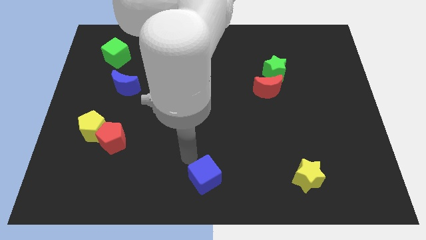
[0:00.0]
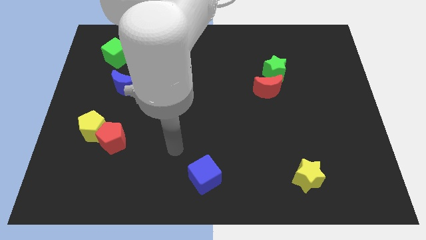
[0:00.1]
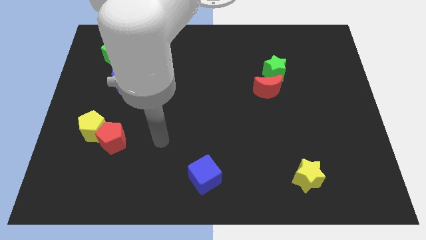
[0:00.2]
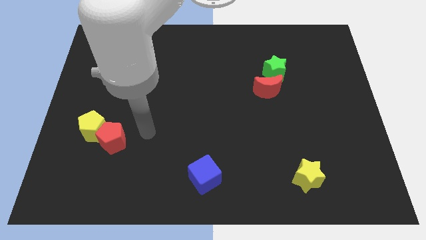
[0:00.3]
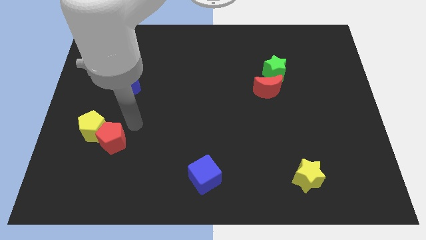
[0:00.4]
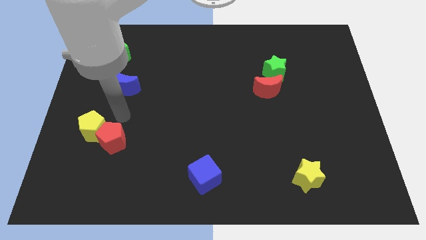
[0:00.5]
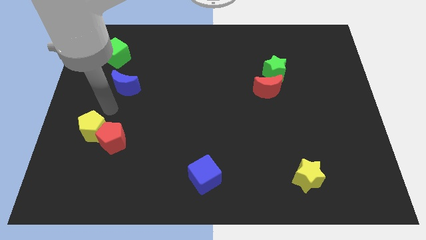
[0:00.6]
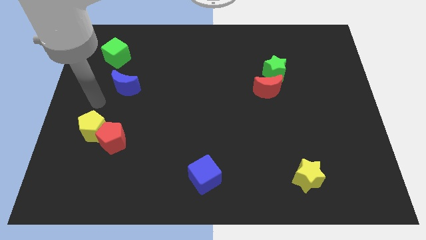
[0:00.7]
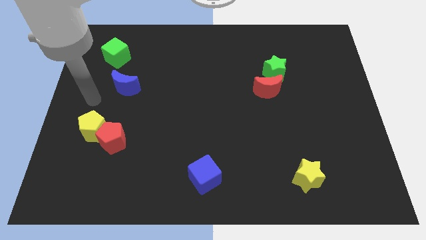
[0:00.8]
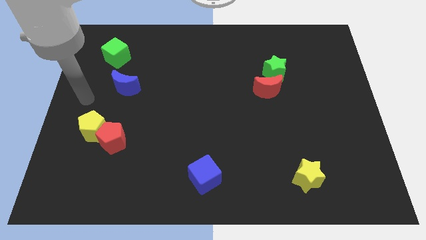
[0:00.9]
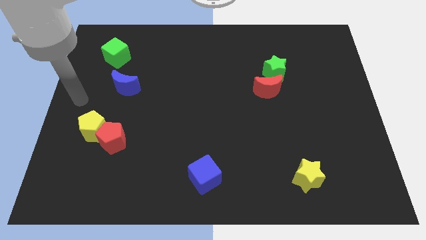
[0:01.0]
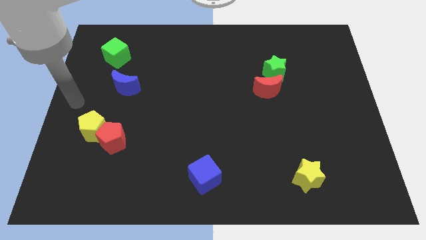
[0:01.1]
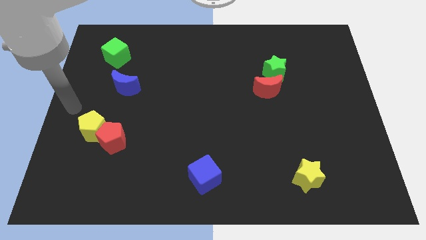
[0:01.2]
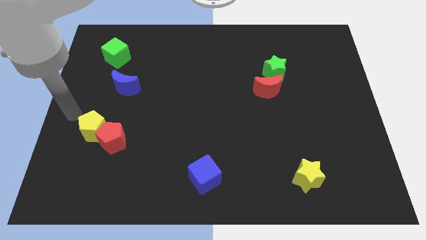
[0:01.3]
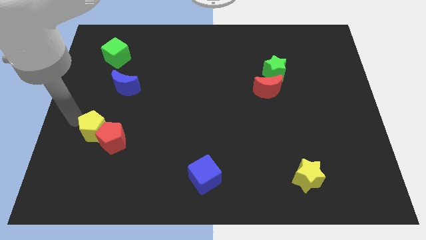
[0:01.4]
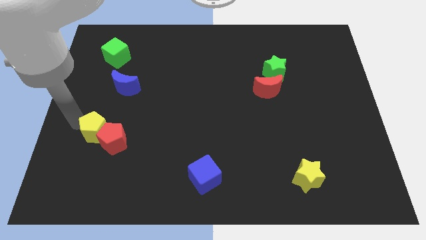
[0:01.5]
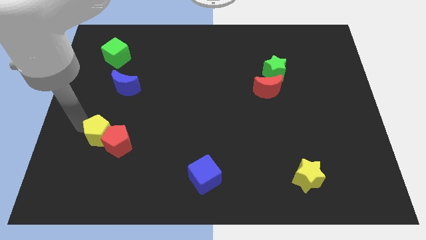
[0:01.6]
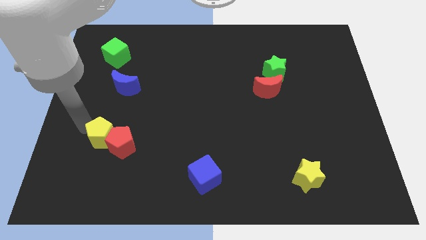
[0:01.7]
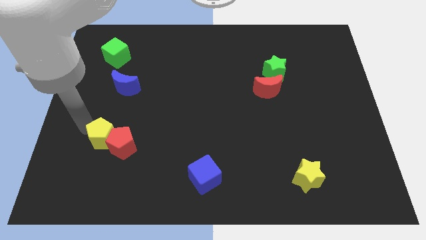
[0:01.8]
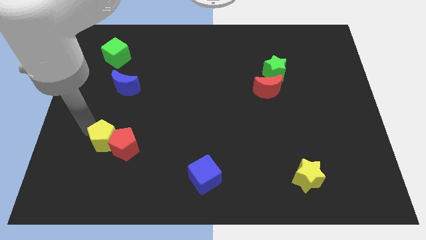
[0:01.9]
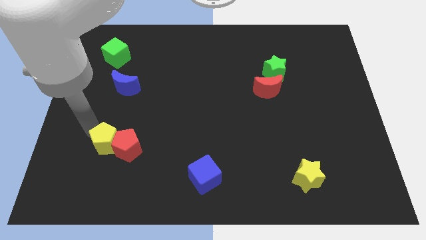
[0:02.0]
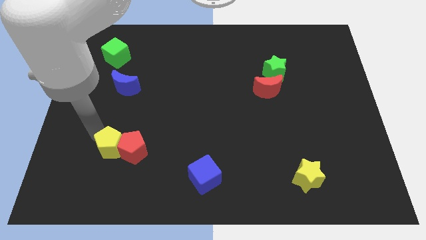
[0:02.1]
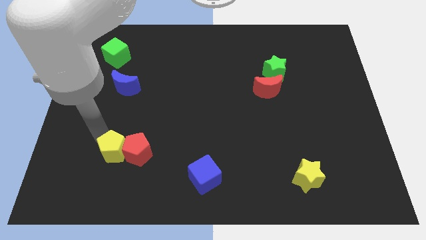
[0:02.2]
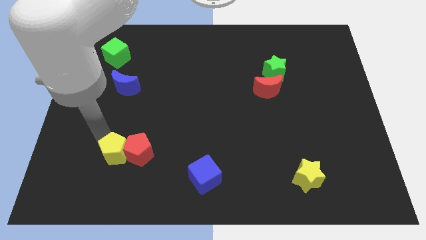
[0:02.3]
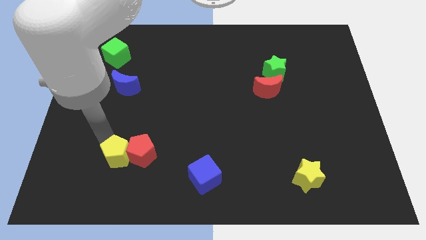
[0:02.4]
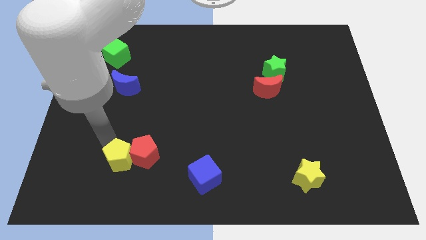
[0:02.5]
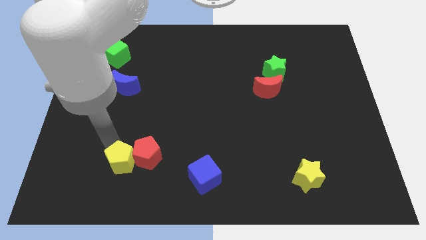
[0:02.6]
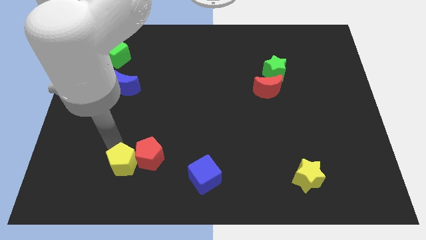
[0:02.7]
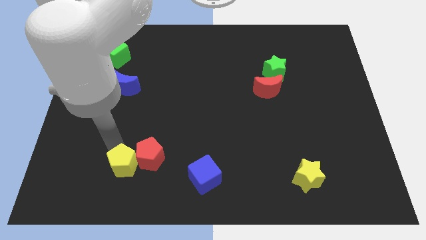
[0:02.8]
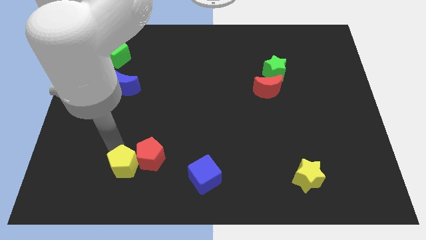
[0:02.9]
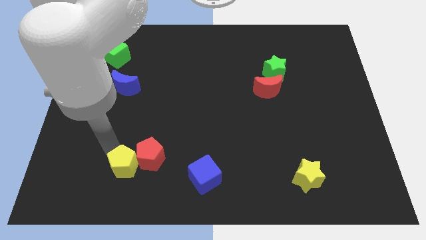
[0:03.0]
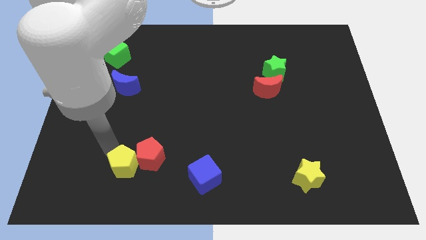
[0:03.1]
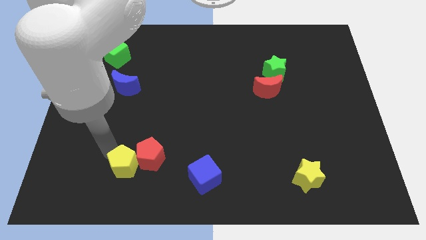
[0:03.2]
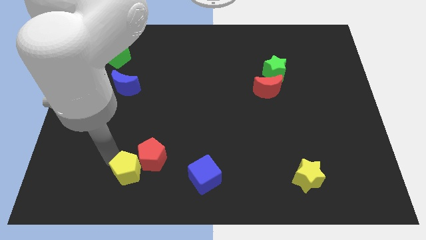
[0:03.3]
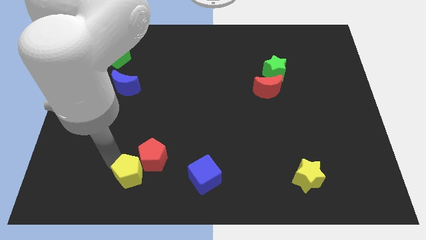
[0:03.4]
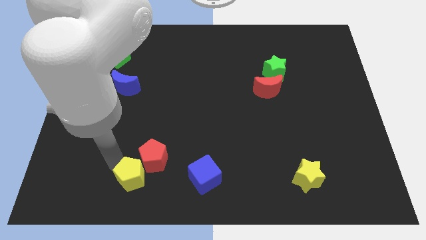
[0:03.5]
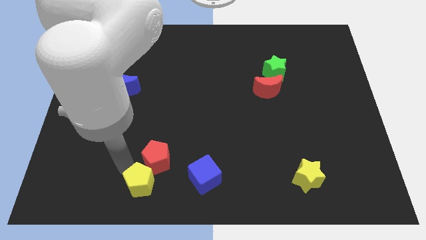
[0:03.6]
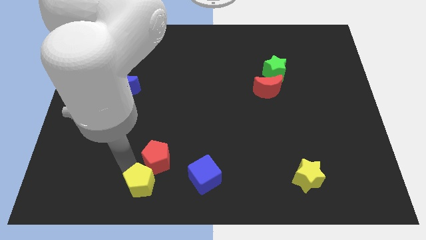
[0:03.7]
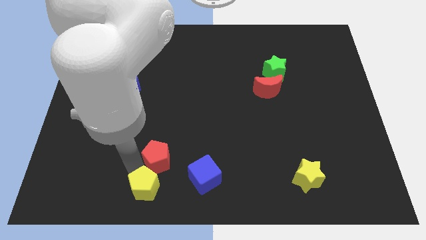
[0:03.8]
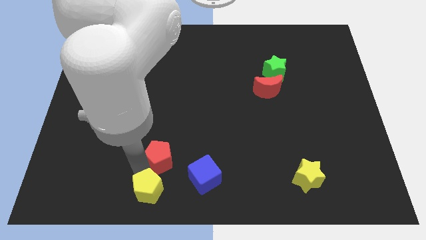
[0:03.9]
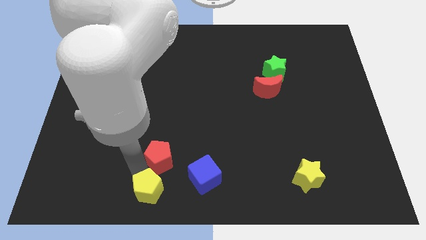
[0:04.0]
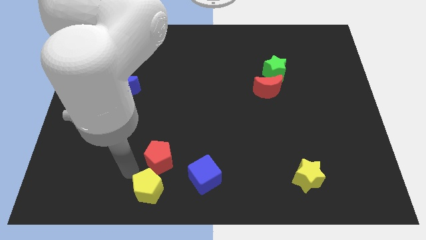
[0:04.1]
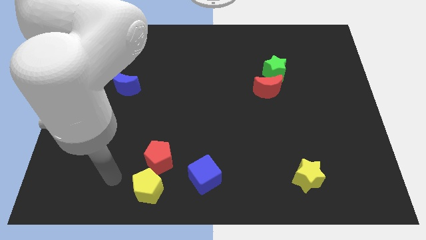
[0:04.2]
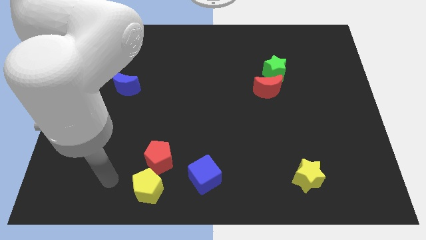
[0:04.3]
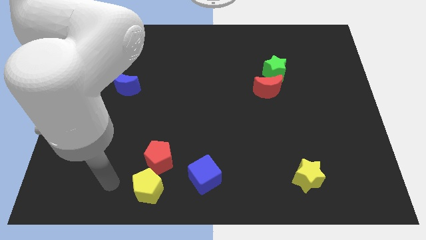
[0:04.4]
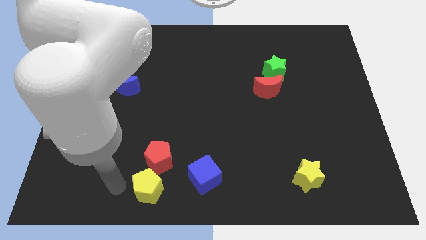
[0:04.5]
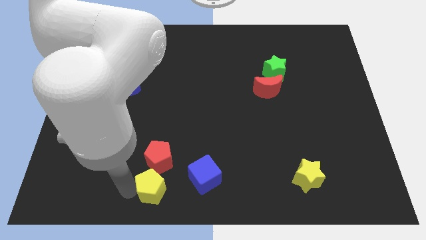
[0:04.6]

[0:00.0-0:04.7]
place the yellow pentagon below the red pentagon

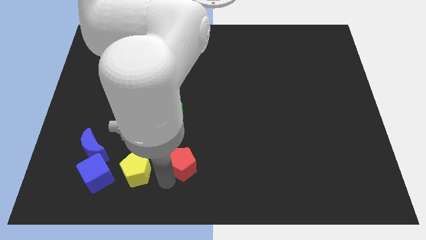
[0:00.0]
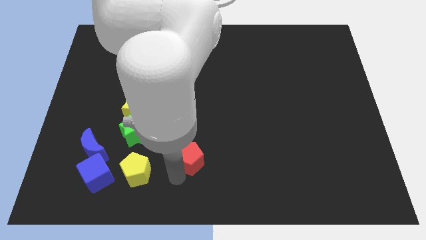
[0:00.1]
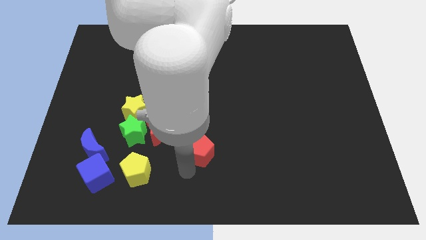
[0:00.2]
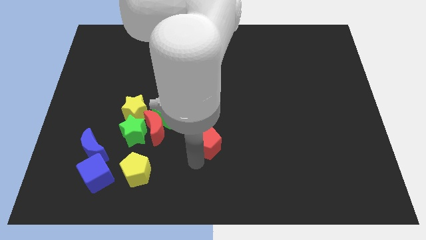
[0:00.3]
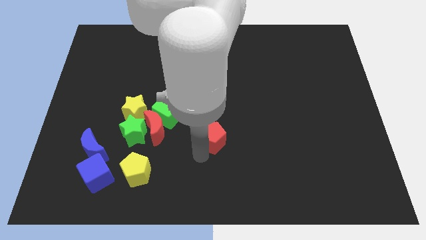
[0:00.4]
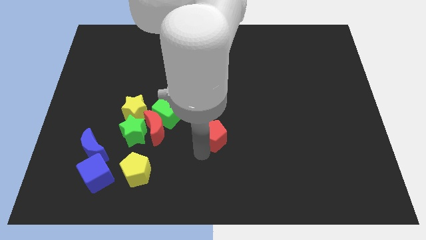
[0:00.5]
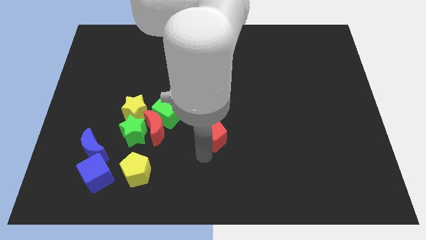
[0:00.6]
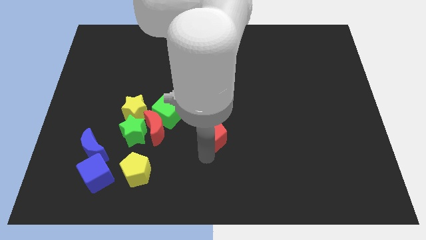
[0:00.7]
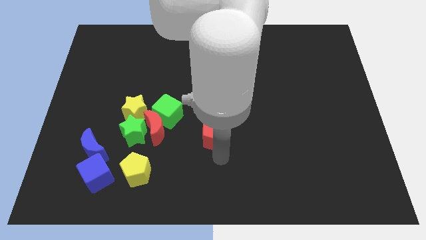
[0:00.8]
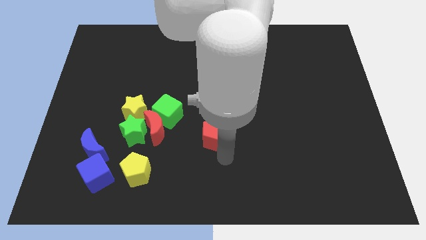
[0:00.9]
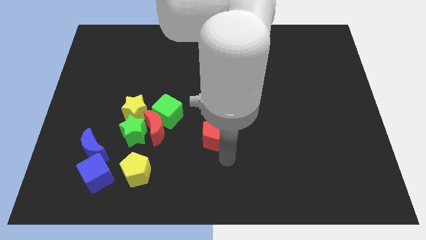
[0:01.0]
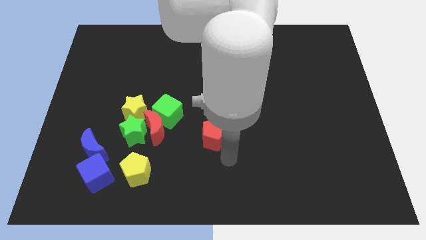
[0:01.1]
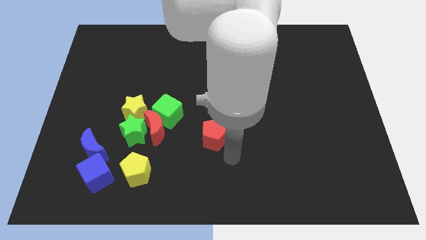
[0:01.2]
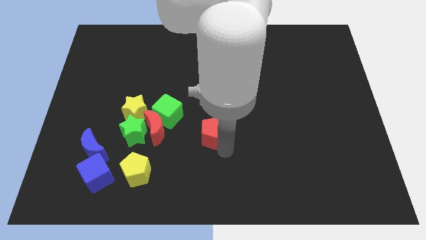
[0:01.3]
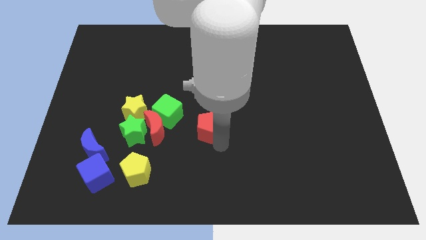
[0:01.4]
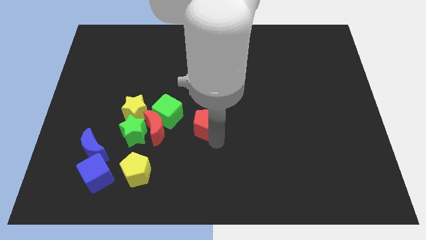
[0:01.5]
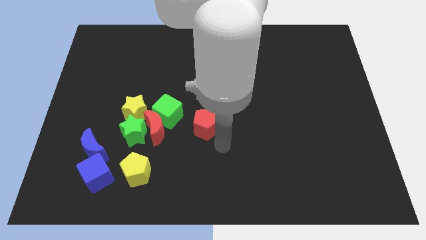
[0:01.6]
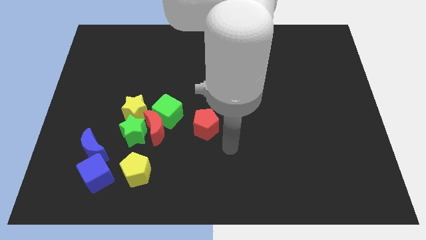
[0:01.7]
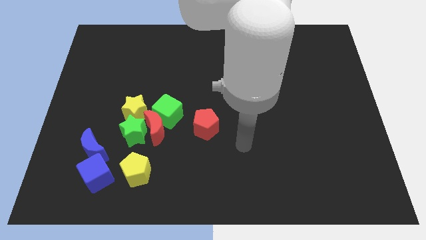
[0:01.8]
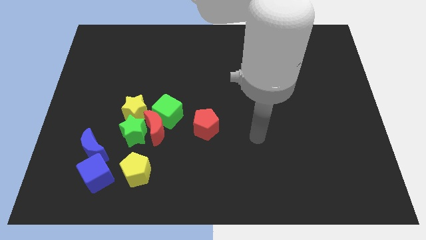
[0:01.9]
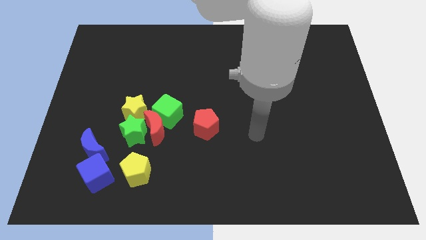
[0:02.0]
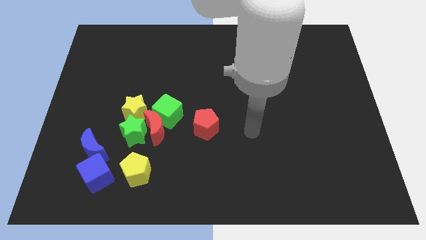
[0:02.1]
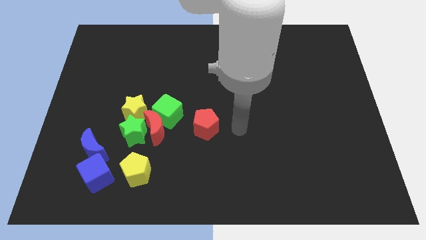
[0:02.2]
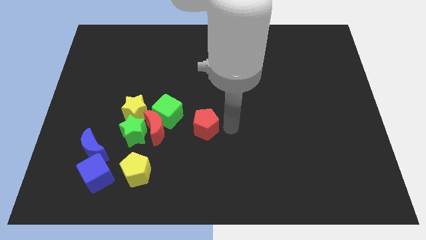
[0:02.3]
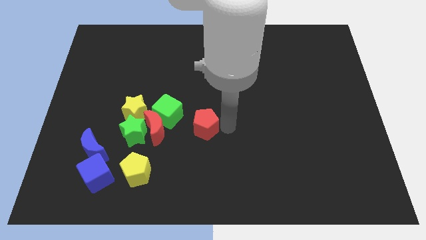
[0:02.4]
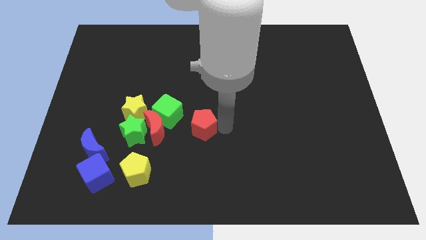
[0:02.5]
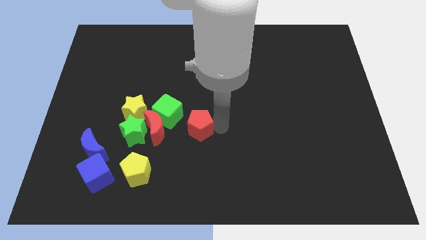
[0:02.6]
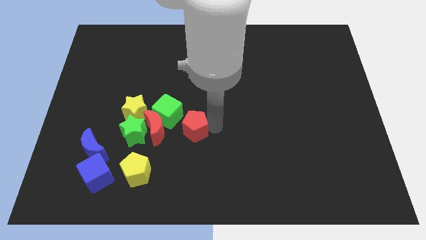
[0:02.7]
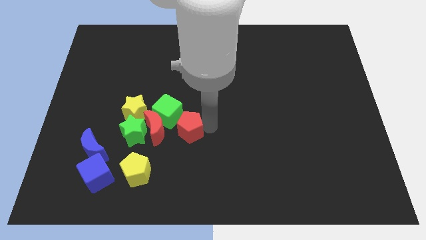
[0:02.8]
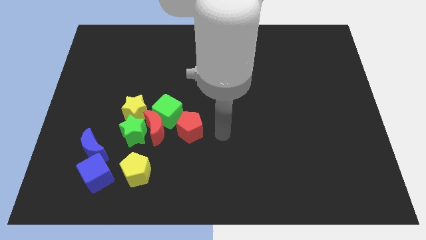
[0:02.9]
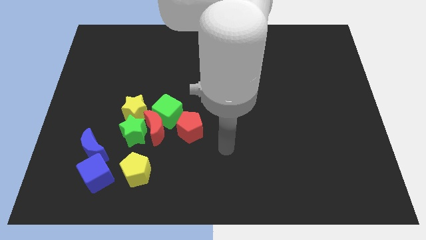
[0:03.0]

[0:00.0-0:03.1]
push the red pentagon to the bottom right side of the green cube

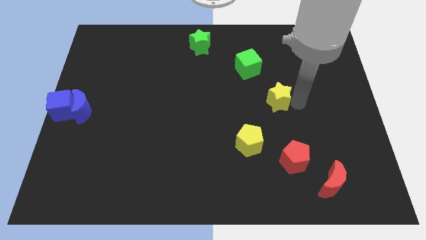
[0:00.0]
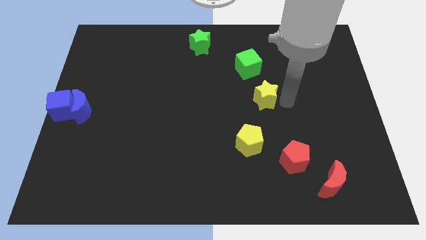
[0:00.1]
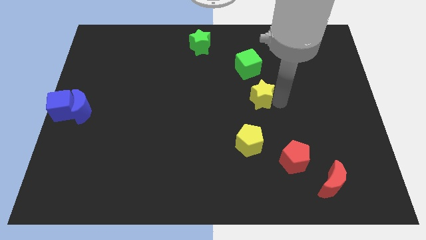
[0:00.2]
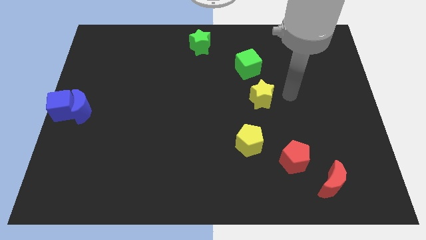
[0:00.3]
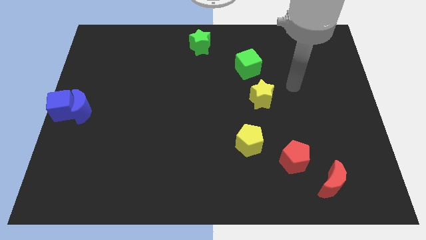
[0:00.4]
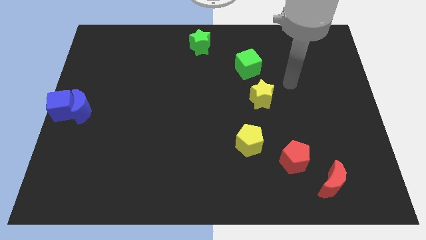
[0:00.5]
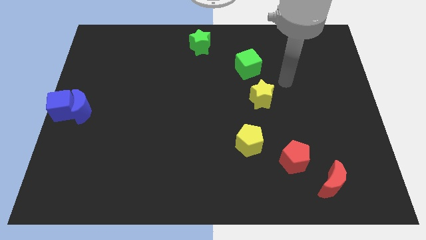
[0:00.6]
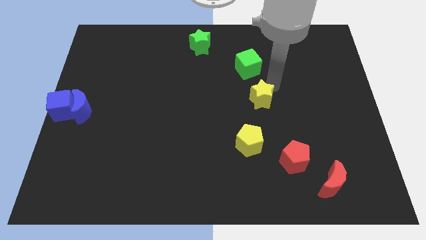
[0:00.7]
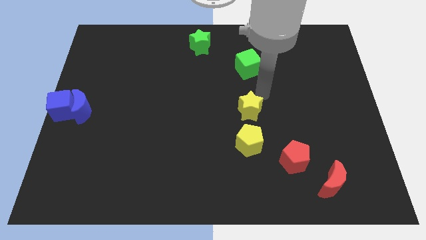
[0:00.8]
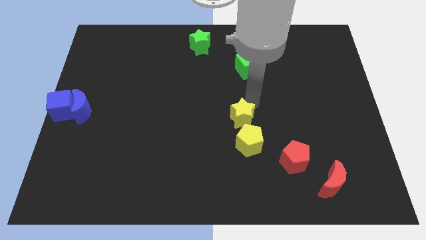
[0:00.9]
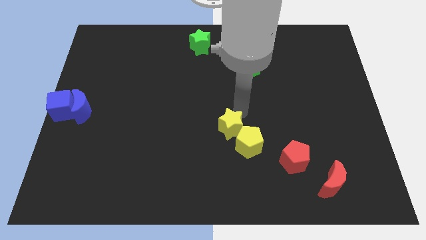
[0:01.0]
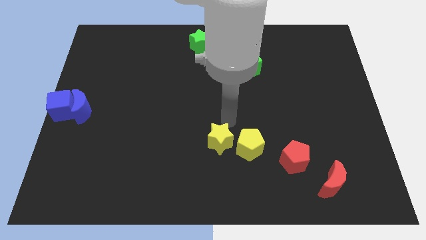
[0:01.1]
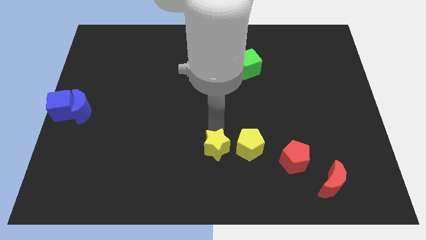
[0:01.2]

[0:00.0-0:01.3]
move the yellow star parallel left to the yellow pentagon
